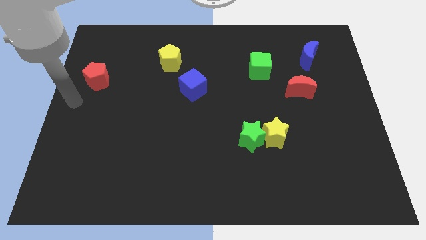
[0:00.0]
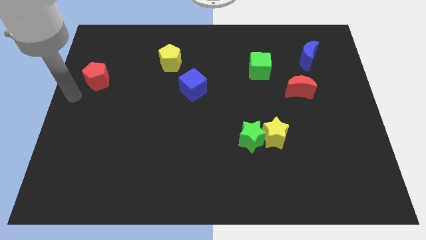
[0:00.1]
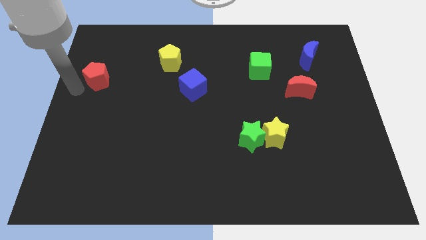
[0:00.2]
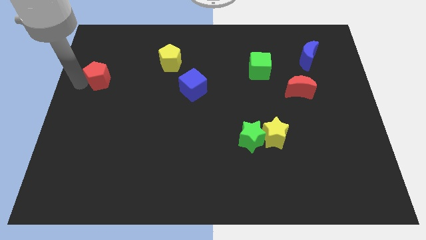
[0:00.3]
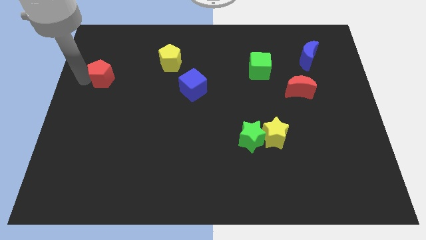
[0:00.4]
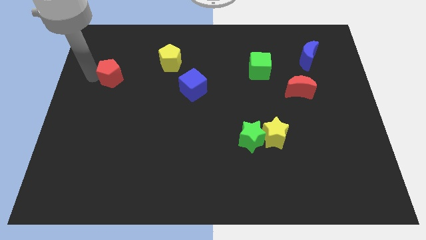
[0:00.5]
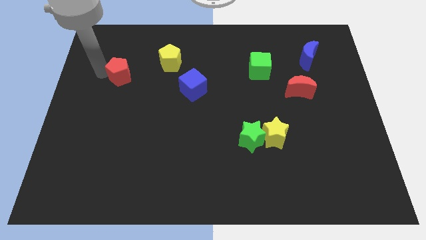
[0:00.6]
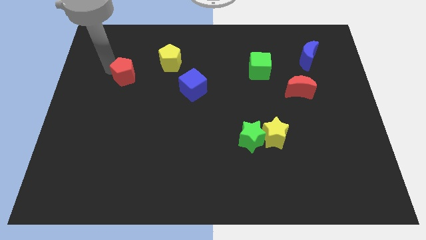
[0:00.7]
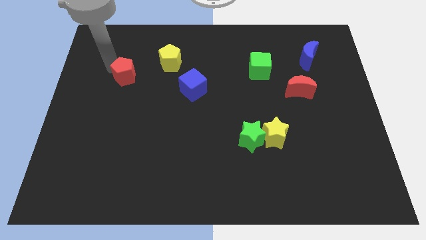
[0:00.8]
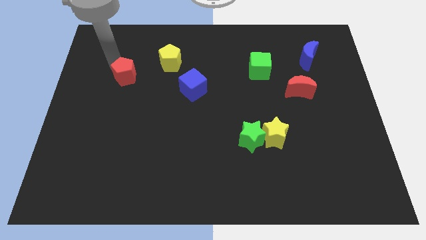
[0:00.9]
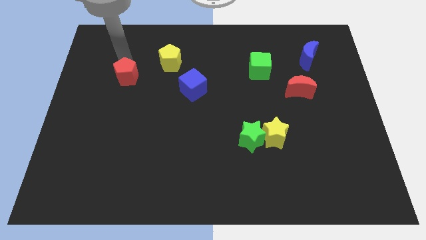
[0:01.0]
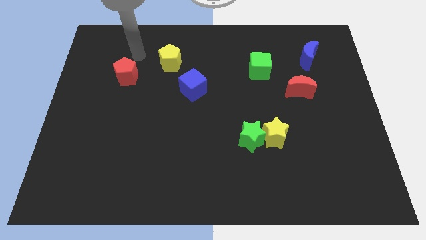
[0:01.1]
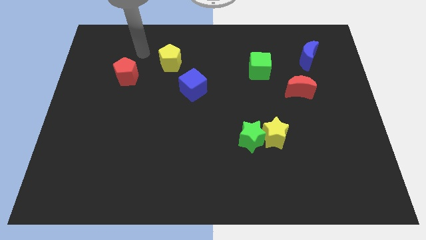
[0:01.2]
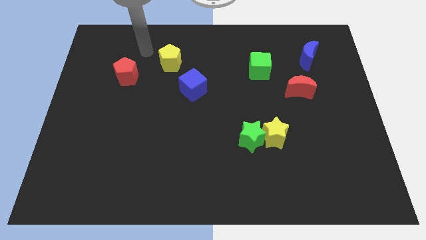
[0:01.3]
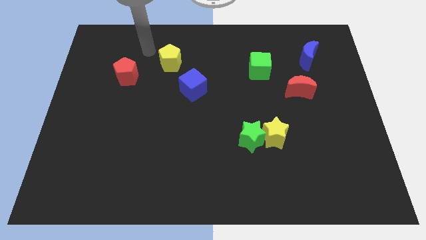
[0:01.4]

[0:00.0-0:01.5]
move the red pentagon slightly to the right

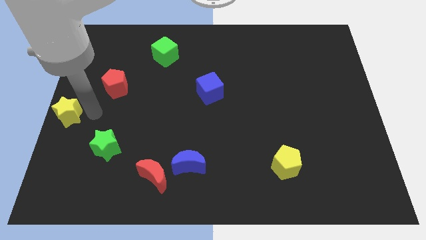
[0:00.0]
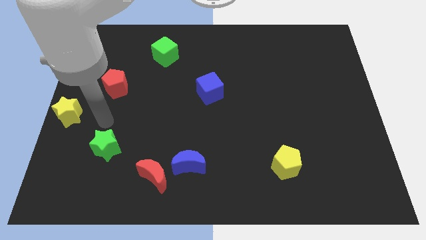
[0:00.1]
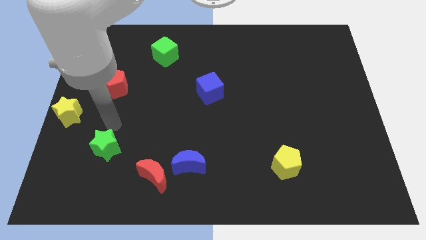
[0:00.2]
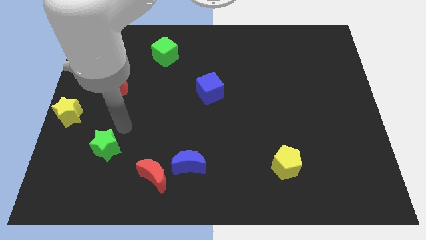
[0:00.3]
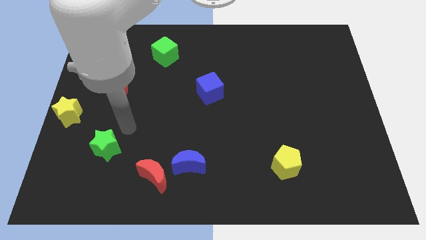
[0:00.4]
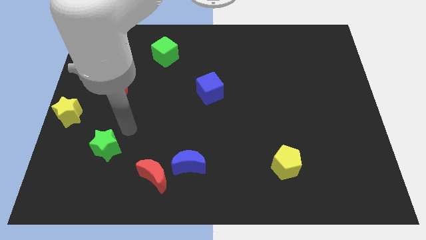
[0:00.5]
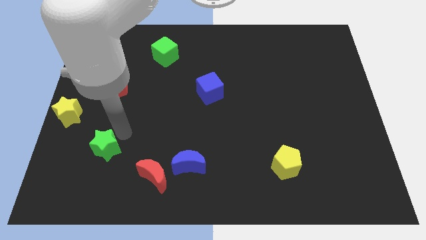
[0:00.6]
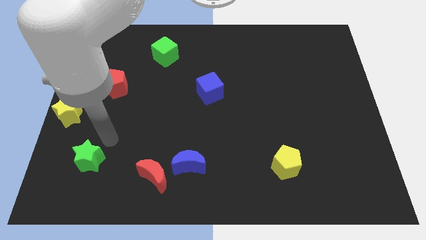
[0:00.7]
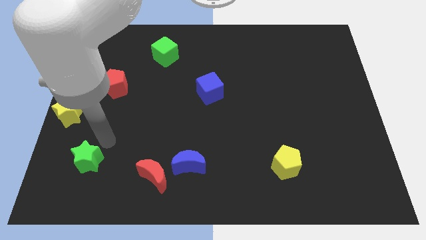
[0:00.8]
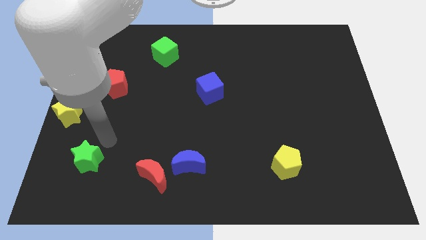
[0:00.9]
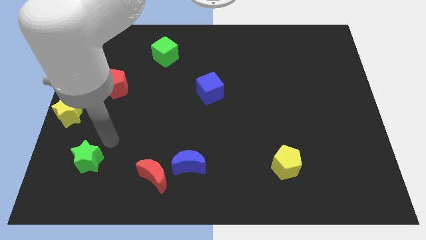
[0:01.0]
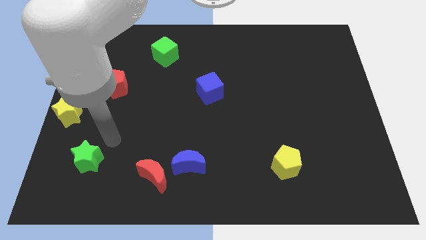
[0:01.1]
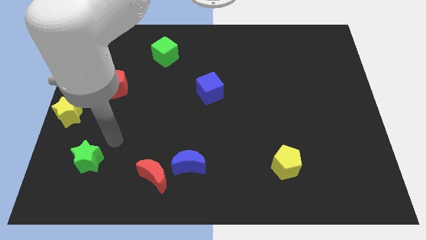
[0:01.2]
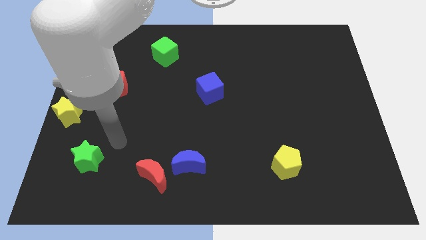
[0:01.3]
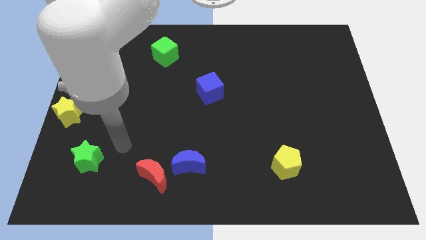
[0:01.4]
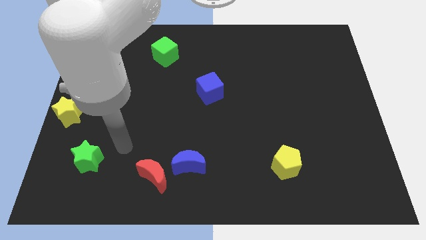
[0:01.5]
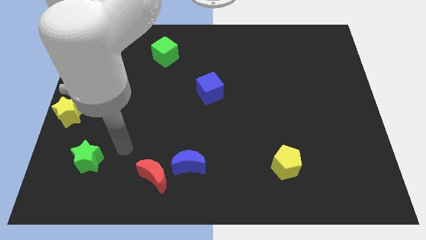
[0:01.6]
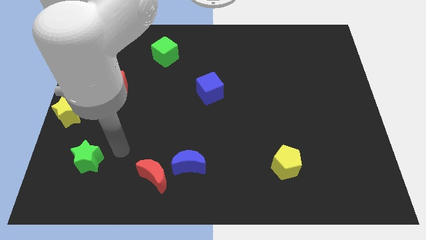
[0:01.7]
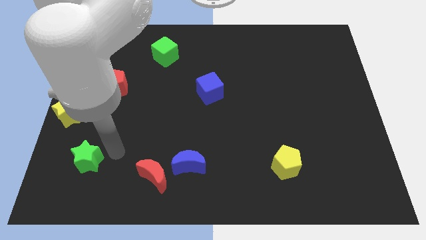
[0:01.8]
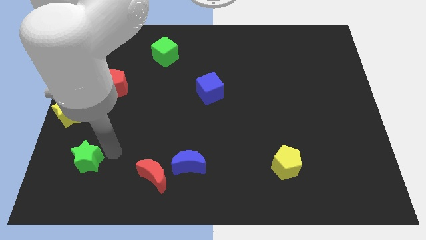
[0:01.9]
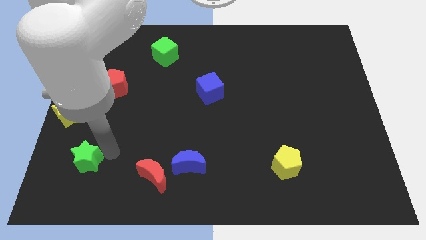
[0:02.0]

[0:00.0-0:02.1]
slightly push the green star to the bottom left side of the board

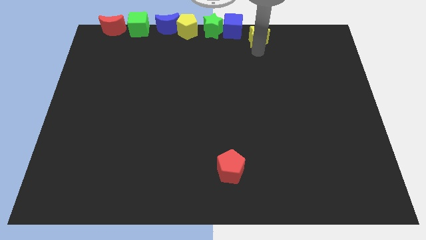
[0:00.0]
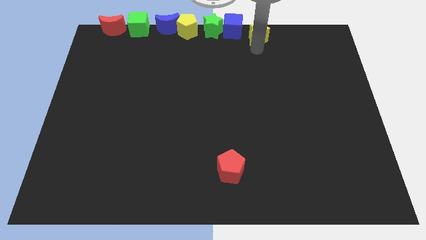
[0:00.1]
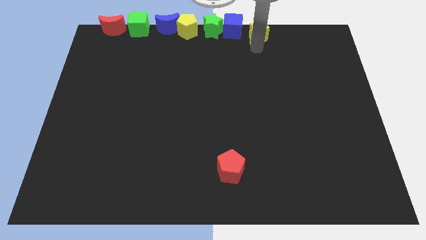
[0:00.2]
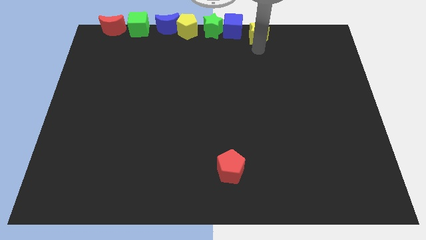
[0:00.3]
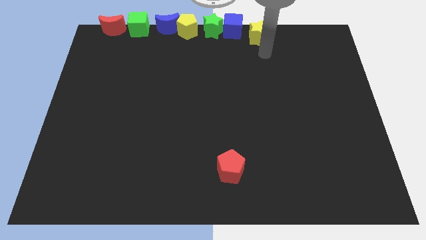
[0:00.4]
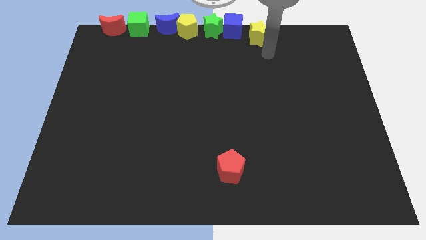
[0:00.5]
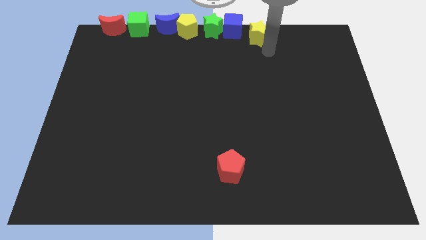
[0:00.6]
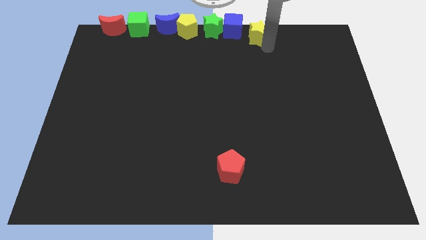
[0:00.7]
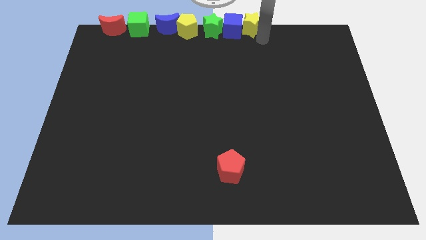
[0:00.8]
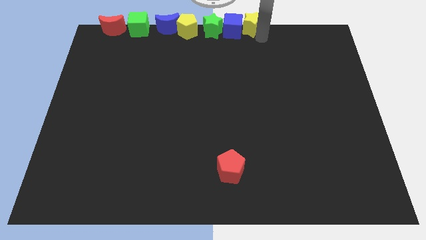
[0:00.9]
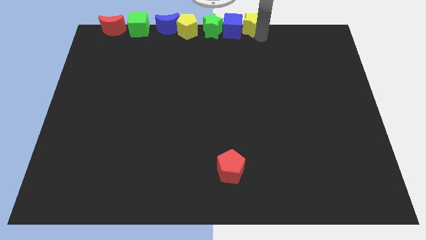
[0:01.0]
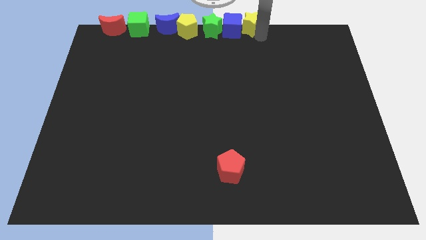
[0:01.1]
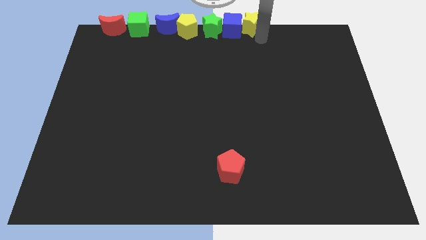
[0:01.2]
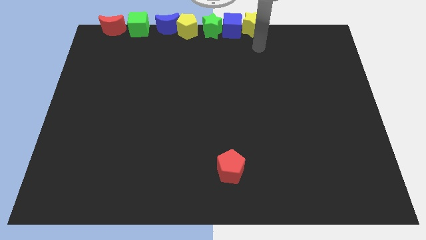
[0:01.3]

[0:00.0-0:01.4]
push the yellow star to the right of the blue cube

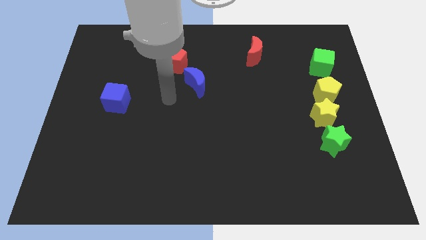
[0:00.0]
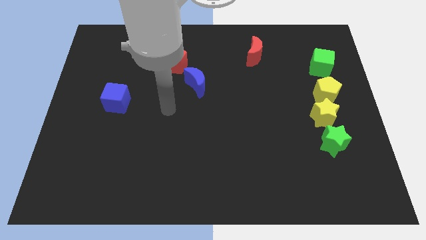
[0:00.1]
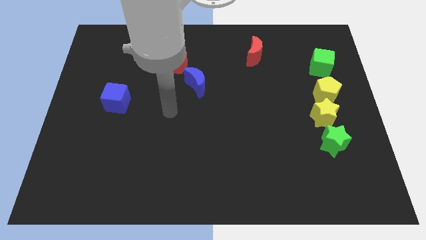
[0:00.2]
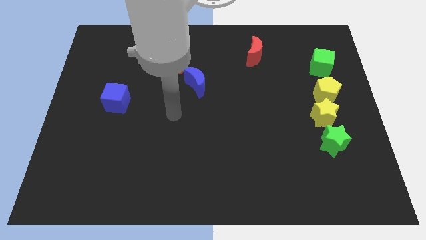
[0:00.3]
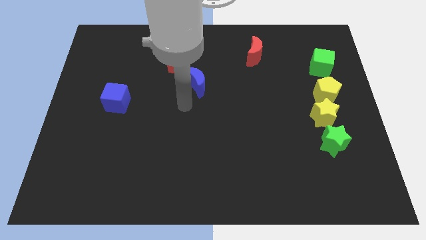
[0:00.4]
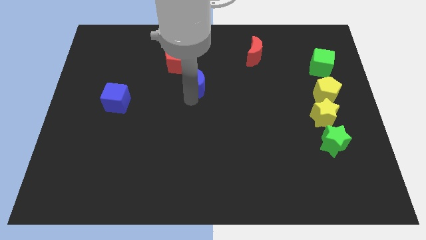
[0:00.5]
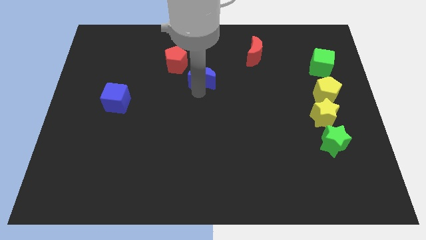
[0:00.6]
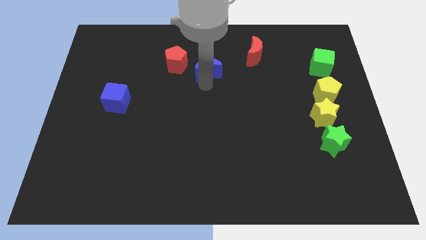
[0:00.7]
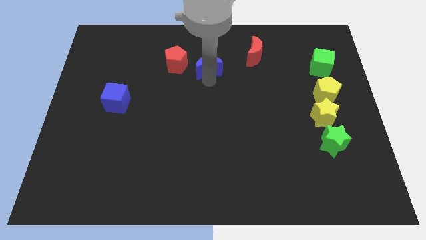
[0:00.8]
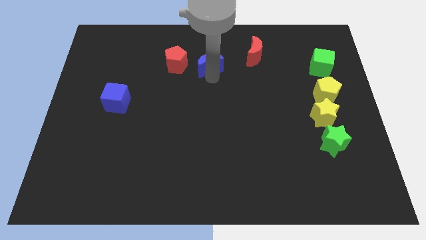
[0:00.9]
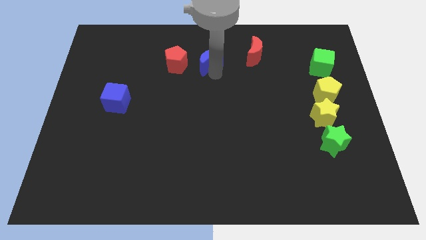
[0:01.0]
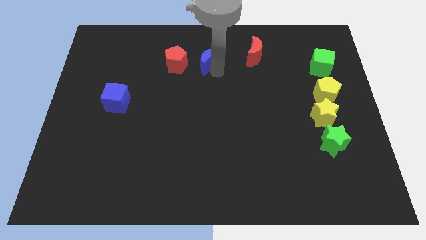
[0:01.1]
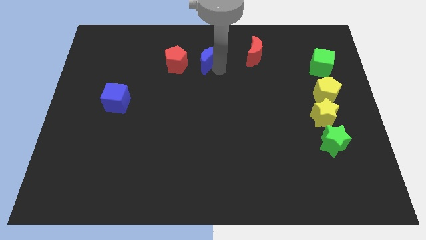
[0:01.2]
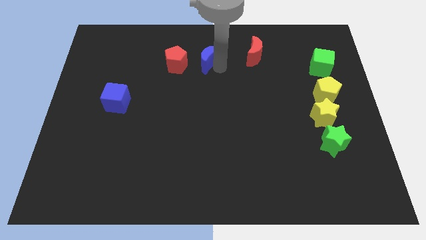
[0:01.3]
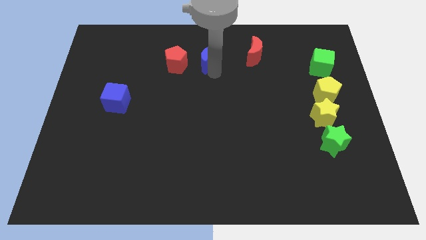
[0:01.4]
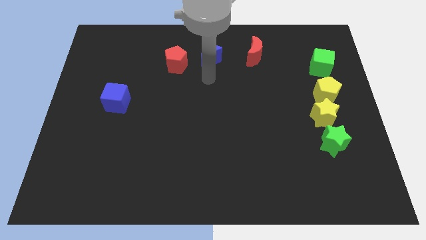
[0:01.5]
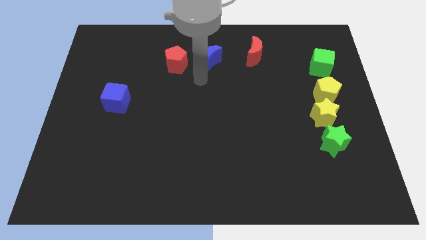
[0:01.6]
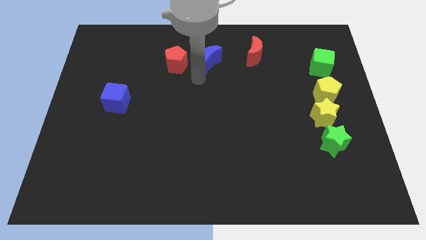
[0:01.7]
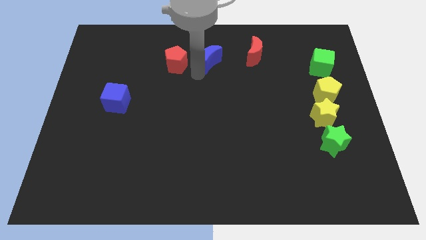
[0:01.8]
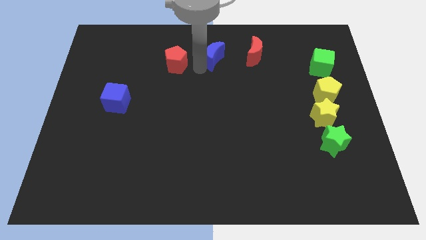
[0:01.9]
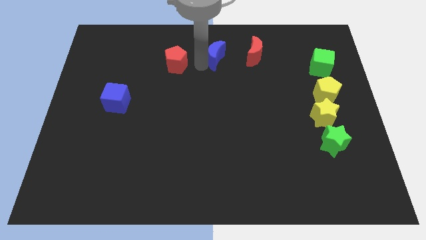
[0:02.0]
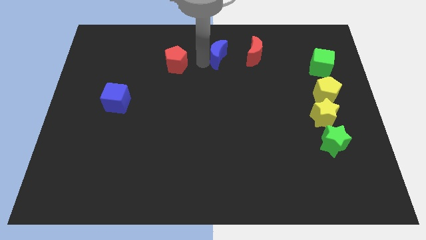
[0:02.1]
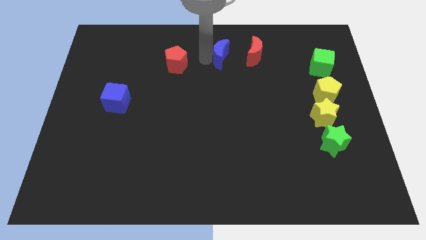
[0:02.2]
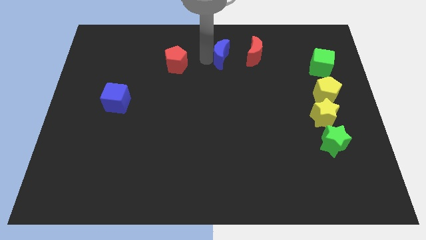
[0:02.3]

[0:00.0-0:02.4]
place the blue crescent at the left of the red crescent

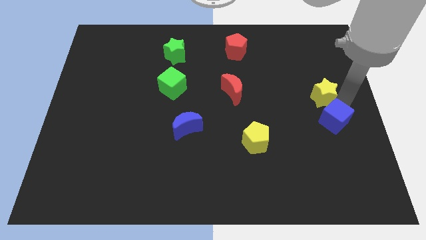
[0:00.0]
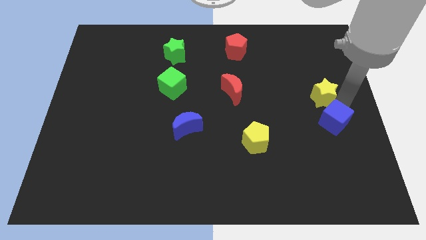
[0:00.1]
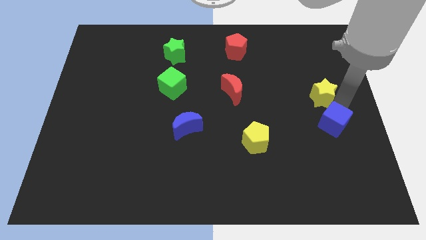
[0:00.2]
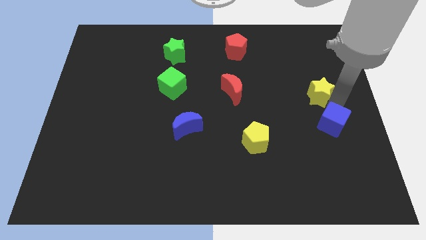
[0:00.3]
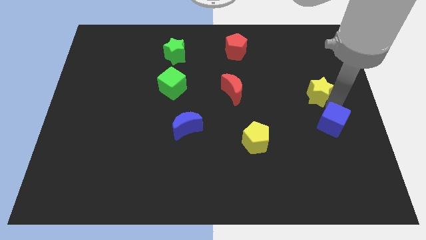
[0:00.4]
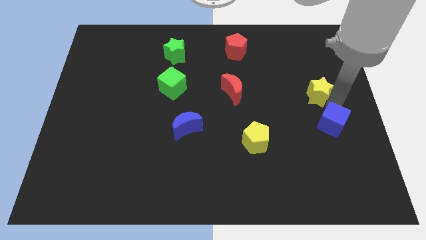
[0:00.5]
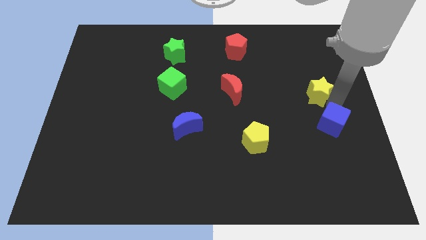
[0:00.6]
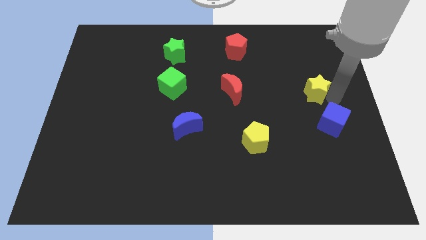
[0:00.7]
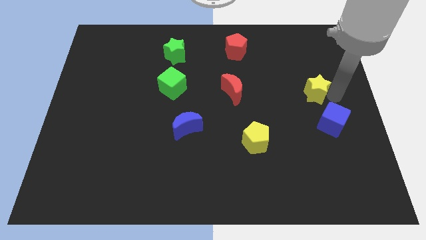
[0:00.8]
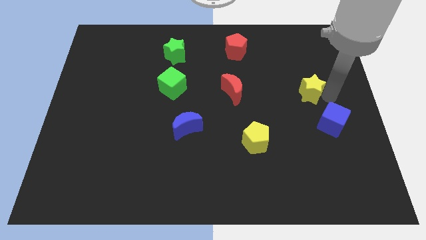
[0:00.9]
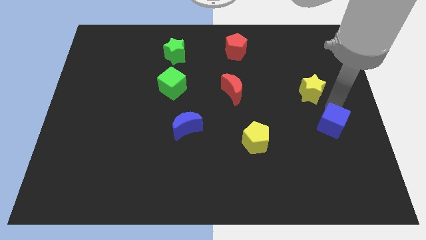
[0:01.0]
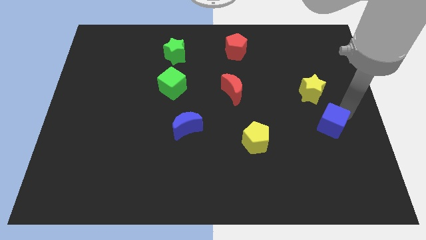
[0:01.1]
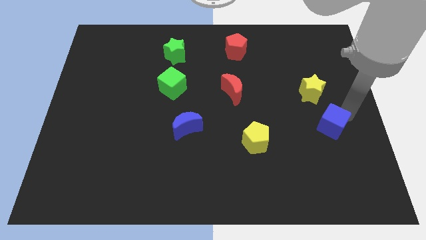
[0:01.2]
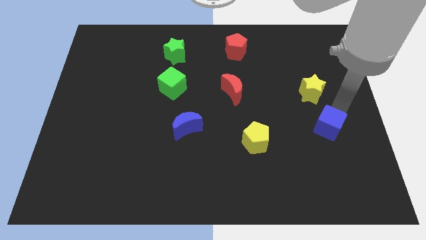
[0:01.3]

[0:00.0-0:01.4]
separate the blue cube and the yellow star

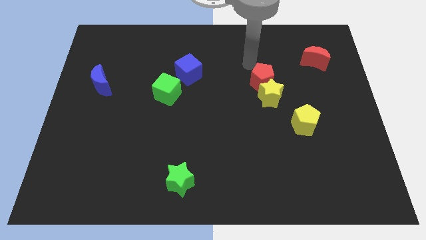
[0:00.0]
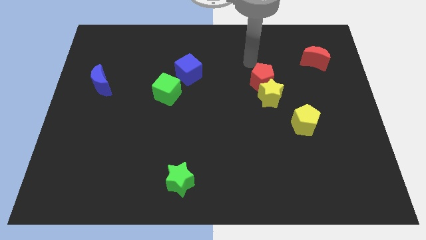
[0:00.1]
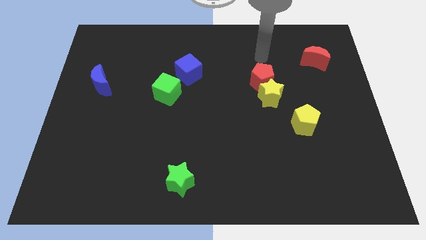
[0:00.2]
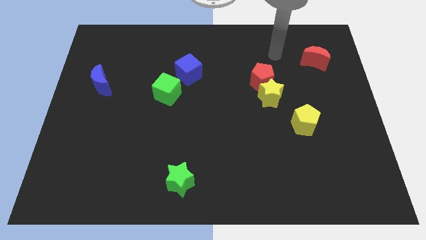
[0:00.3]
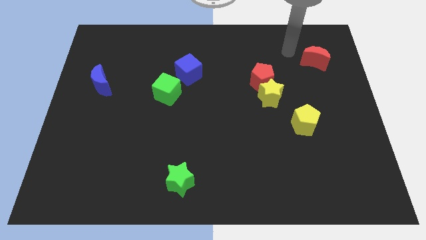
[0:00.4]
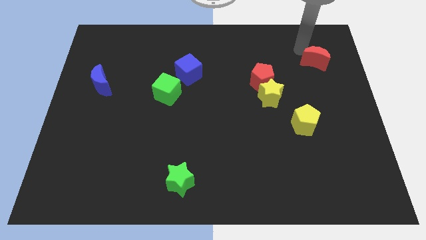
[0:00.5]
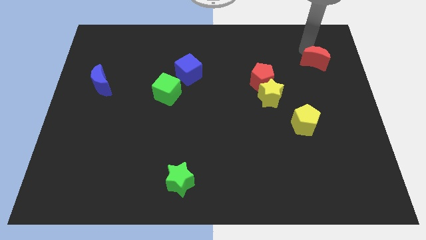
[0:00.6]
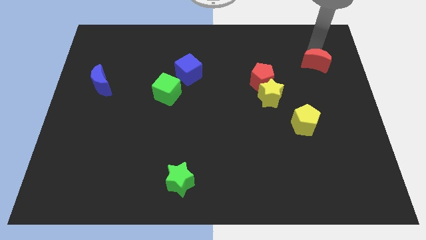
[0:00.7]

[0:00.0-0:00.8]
tap the top side of the red crescent
